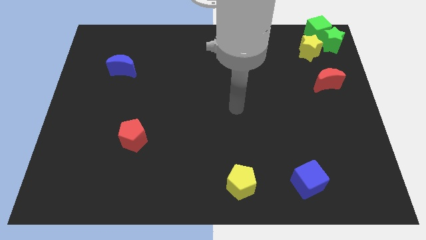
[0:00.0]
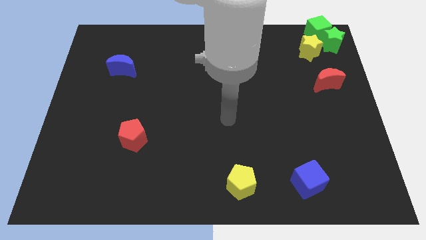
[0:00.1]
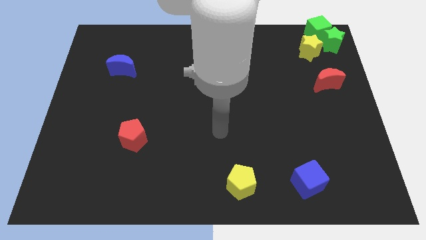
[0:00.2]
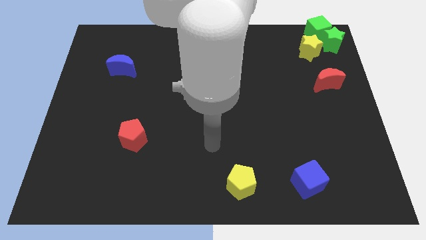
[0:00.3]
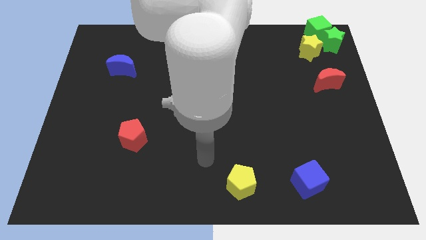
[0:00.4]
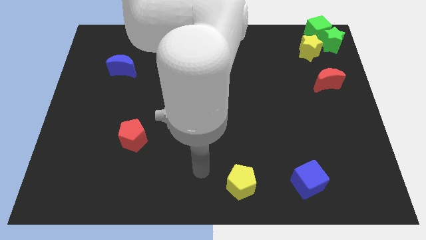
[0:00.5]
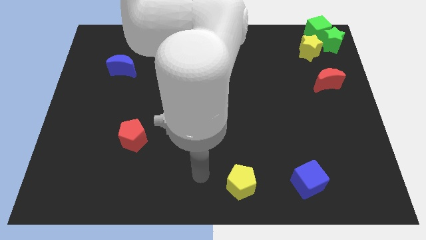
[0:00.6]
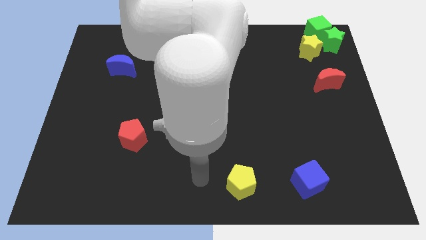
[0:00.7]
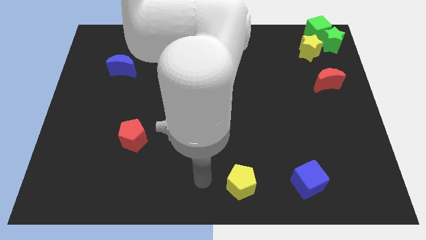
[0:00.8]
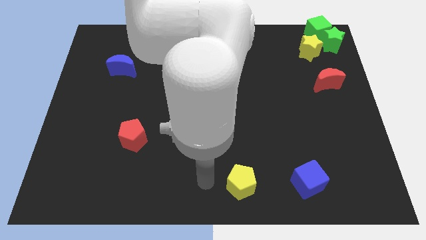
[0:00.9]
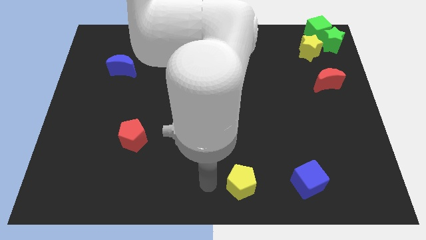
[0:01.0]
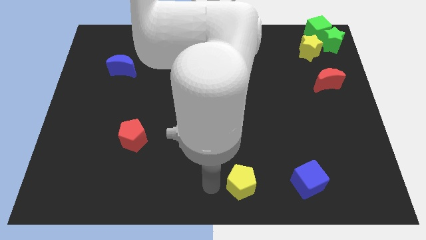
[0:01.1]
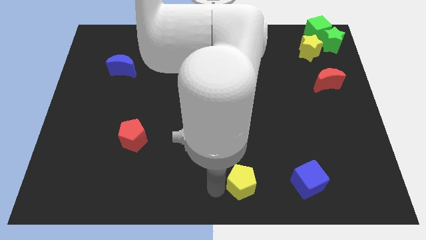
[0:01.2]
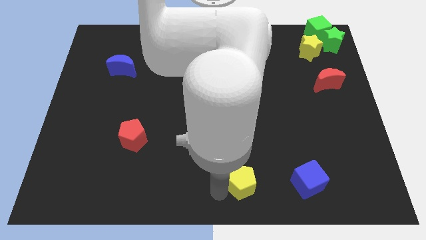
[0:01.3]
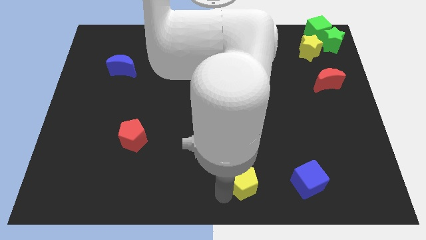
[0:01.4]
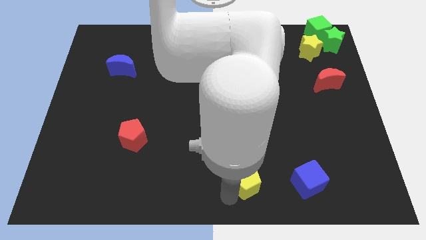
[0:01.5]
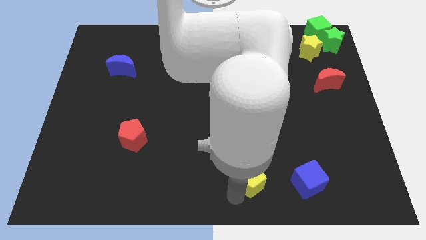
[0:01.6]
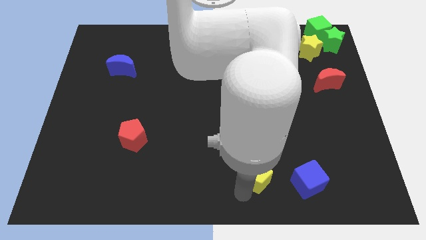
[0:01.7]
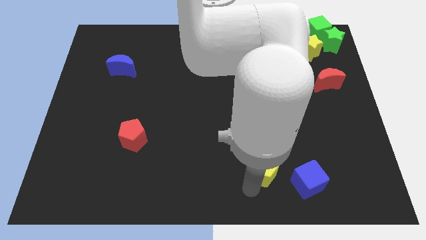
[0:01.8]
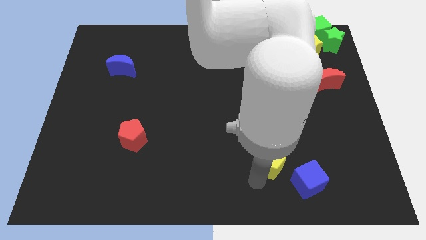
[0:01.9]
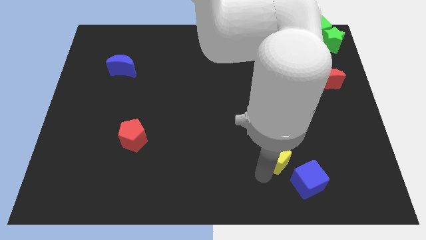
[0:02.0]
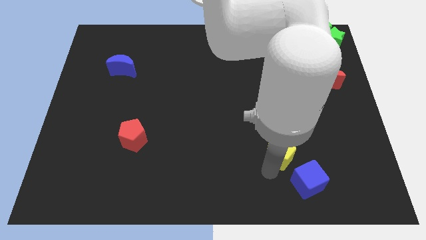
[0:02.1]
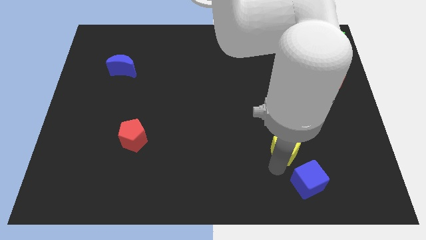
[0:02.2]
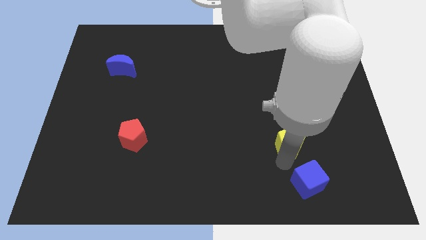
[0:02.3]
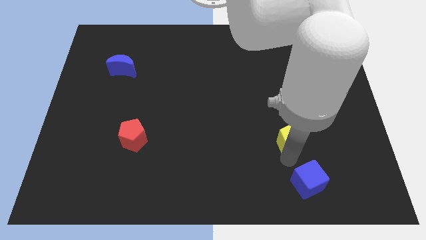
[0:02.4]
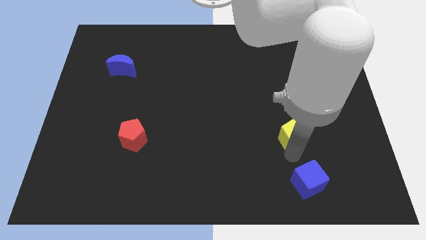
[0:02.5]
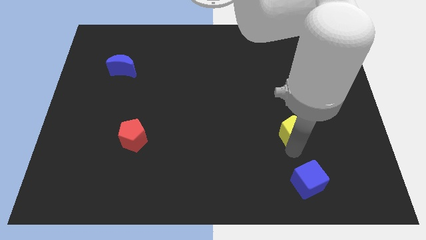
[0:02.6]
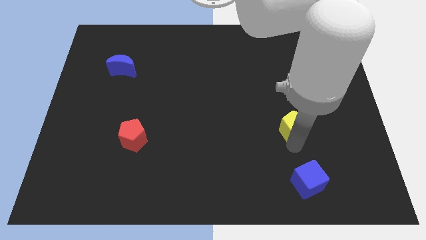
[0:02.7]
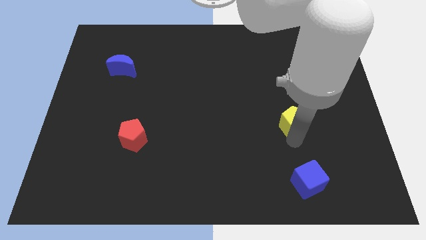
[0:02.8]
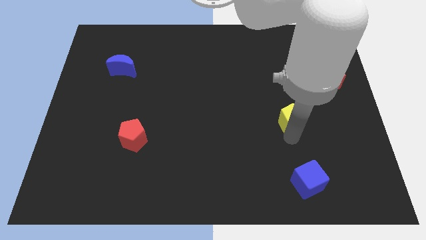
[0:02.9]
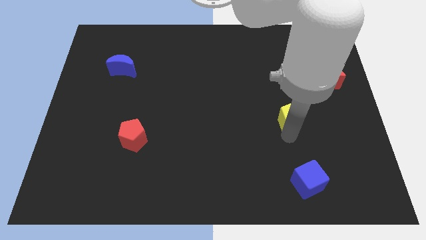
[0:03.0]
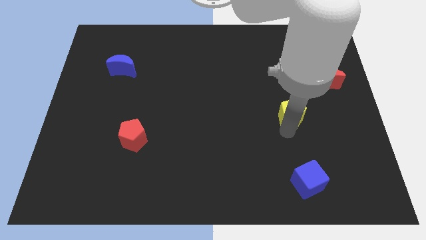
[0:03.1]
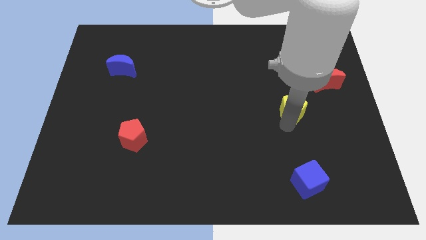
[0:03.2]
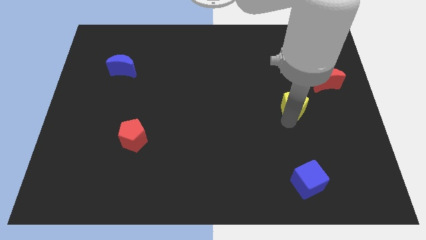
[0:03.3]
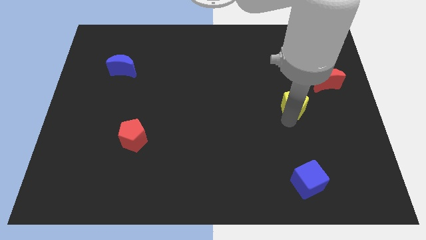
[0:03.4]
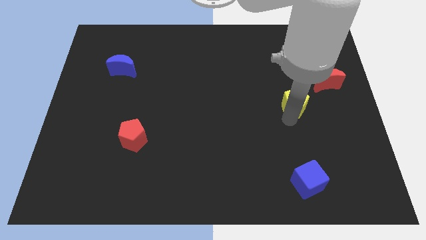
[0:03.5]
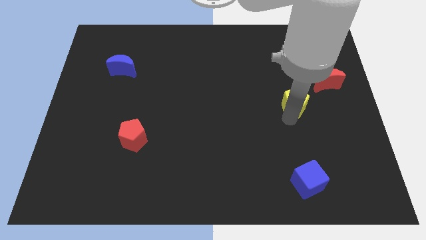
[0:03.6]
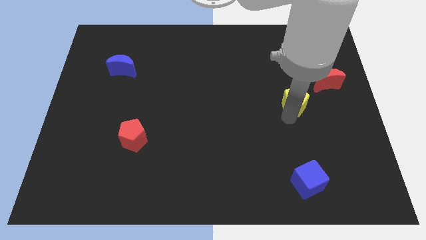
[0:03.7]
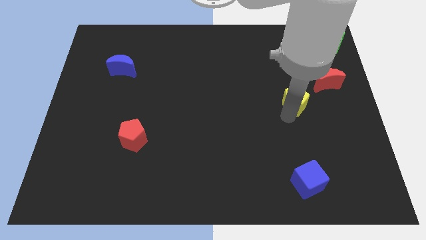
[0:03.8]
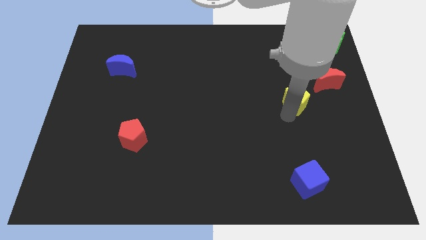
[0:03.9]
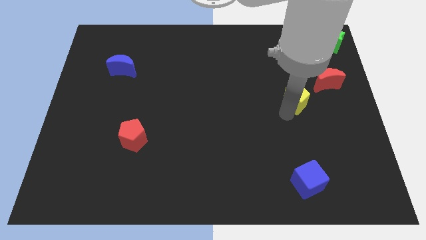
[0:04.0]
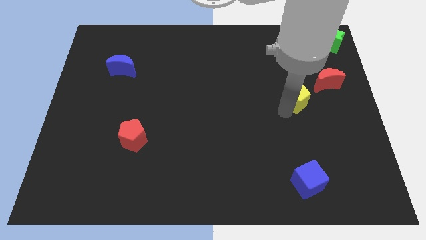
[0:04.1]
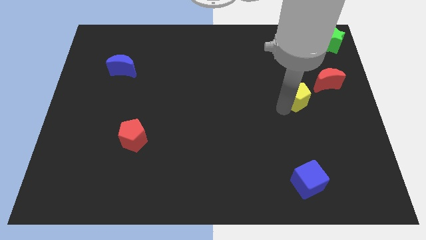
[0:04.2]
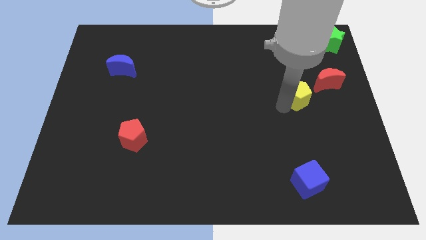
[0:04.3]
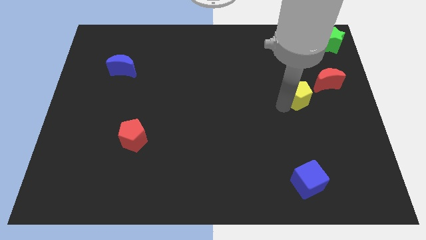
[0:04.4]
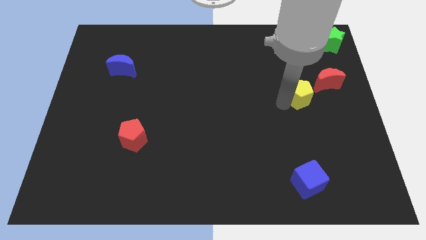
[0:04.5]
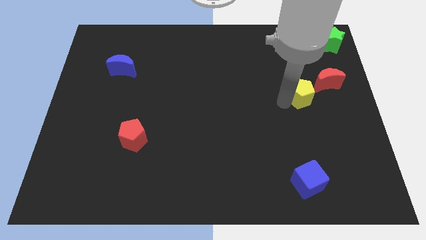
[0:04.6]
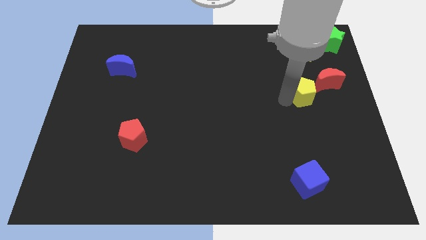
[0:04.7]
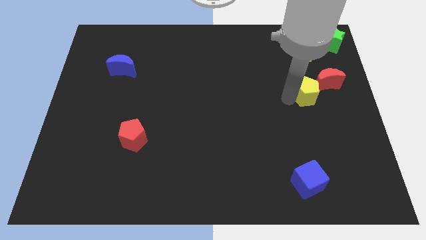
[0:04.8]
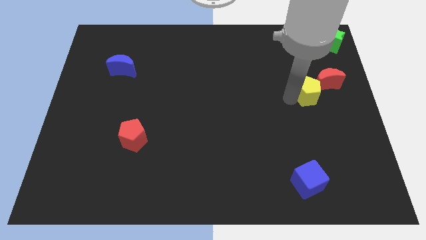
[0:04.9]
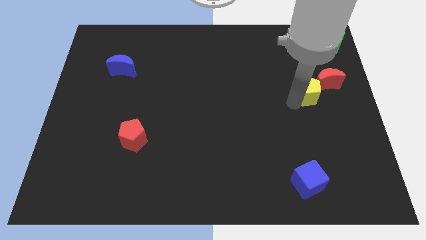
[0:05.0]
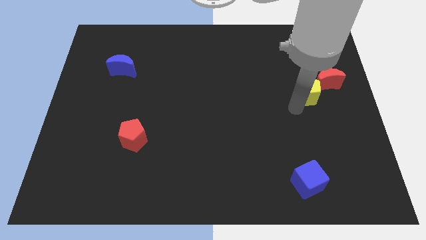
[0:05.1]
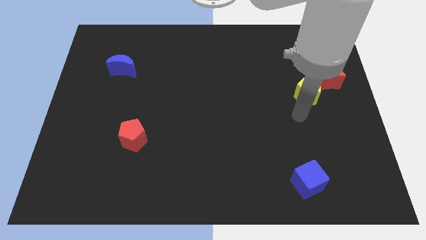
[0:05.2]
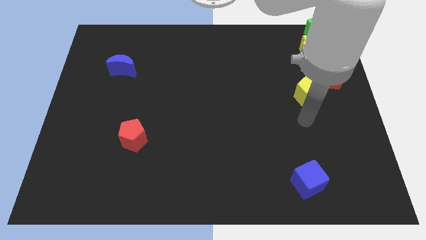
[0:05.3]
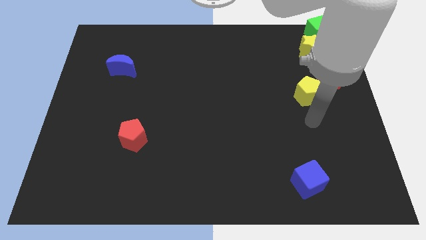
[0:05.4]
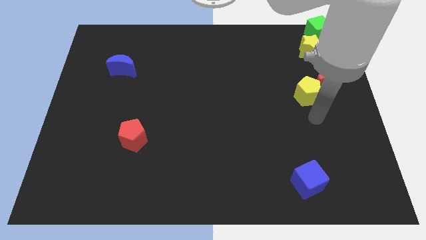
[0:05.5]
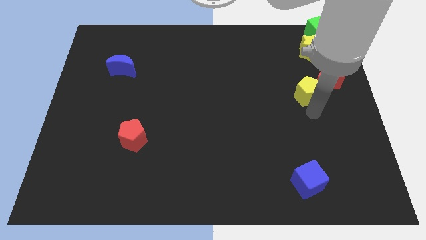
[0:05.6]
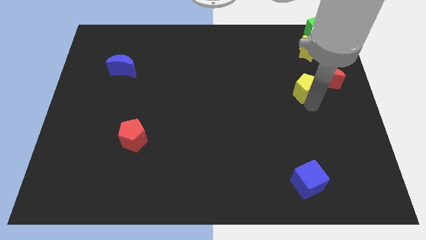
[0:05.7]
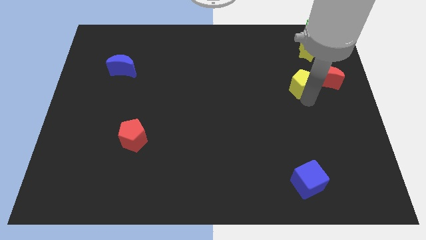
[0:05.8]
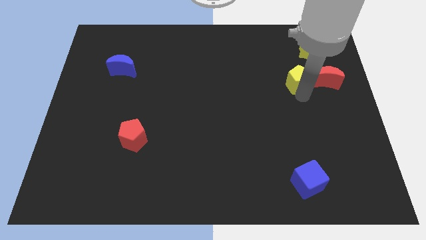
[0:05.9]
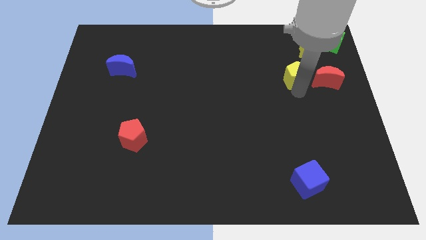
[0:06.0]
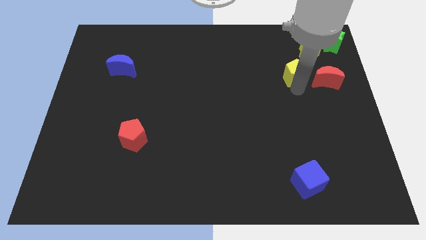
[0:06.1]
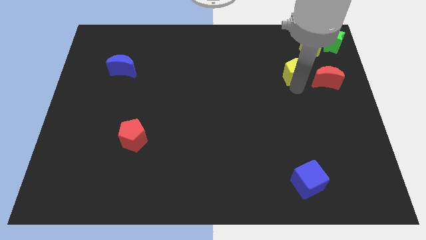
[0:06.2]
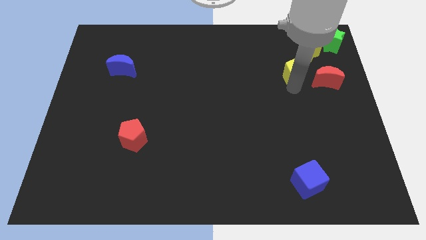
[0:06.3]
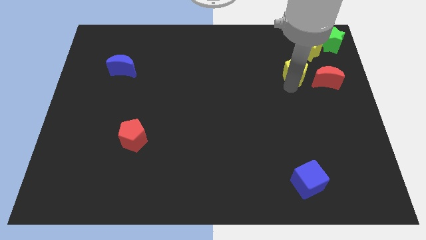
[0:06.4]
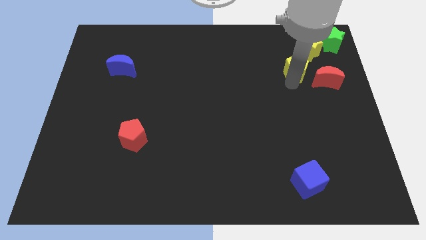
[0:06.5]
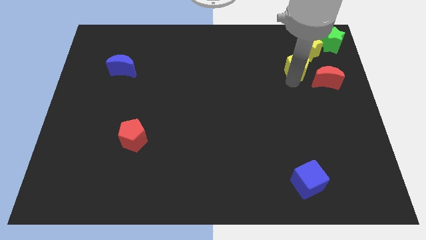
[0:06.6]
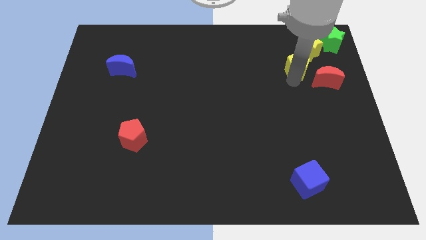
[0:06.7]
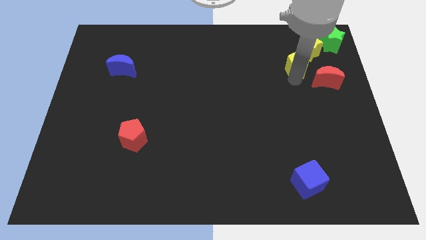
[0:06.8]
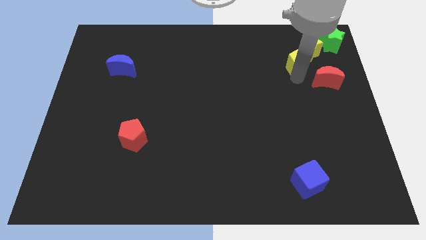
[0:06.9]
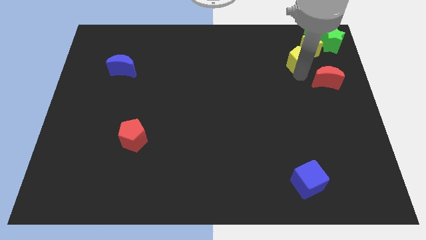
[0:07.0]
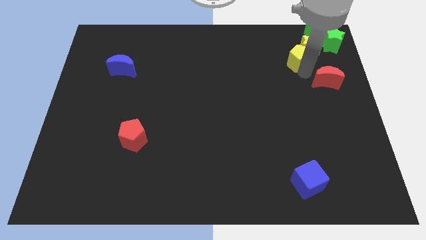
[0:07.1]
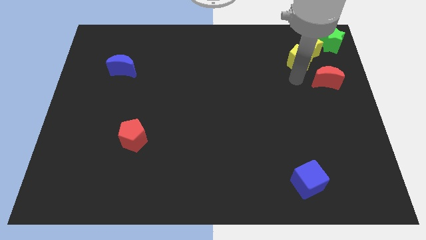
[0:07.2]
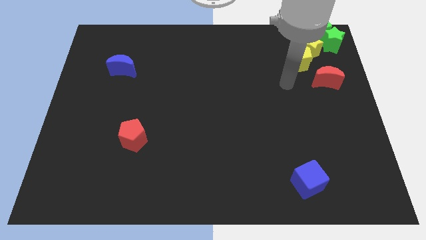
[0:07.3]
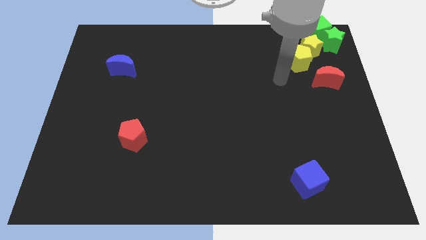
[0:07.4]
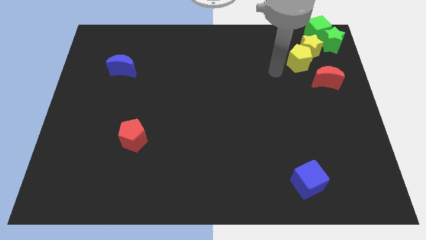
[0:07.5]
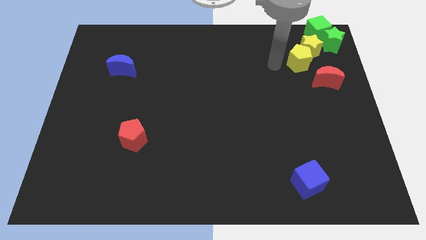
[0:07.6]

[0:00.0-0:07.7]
push the yellow pentagon into the yellow star

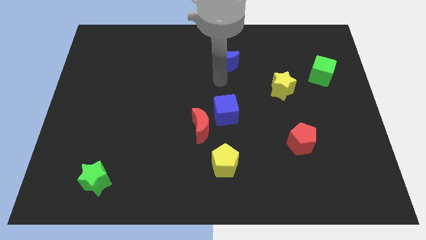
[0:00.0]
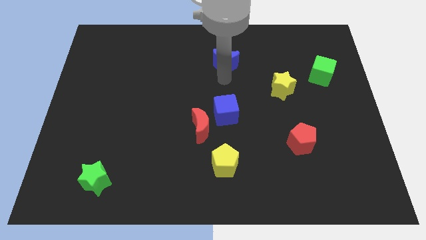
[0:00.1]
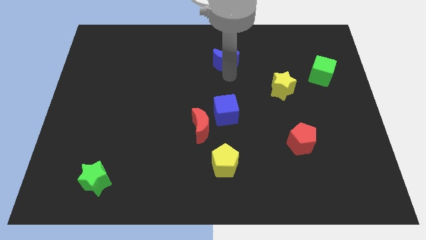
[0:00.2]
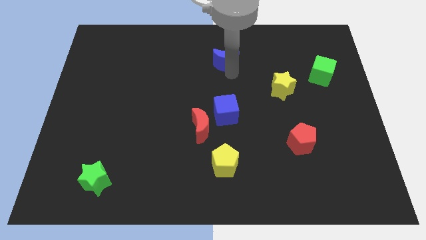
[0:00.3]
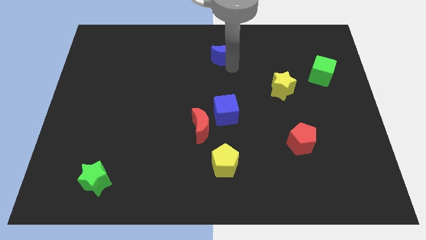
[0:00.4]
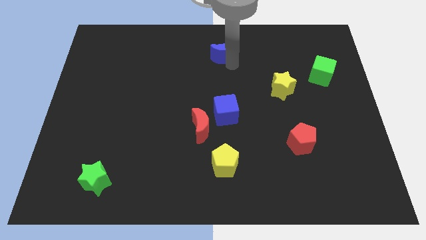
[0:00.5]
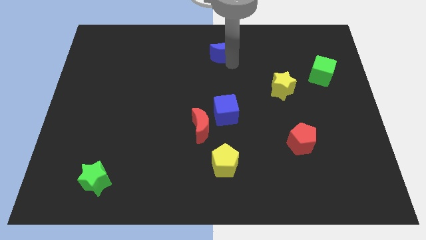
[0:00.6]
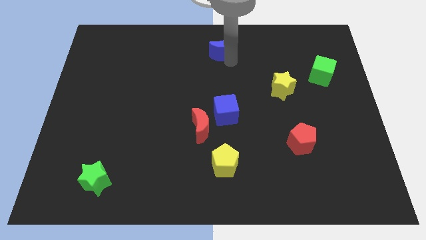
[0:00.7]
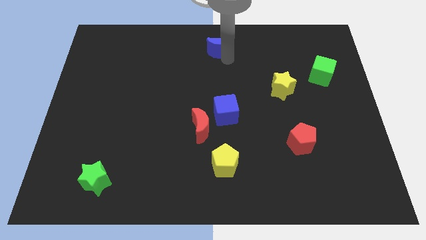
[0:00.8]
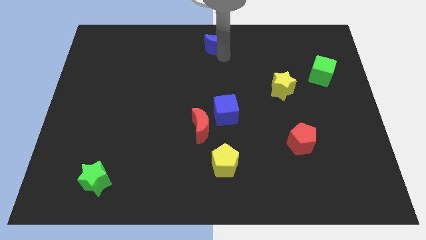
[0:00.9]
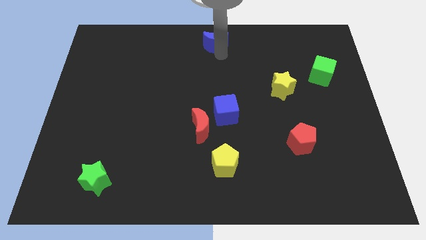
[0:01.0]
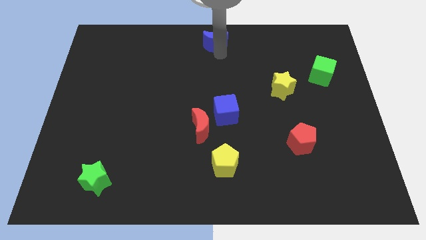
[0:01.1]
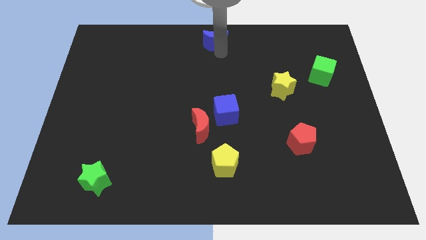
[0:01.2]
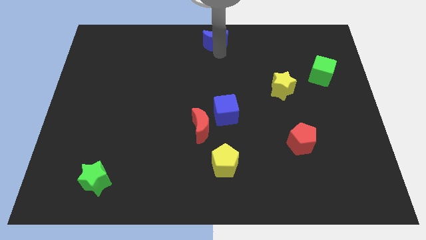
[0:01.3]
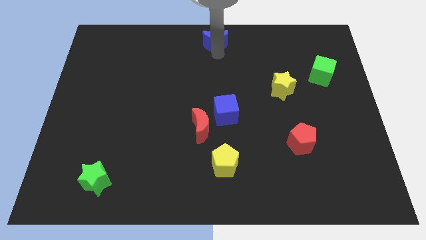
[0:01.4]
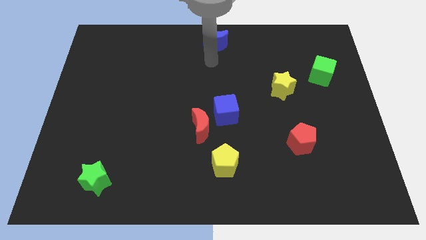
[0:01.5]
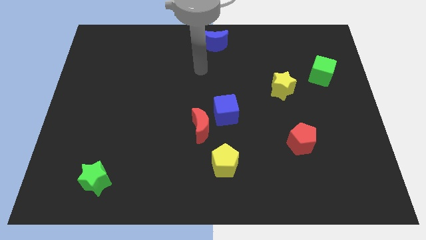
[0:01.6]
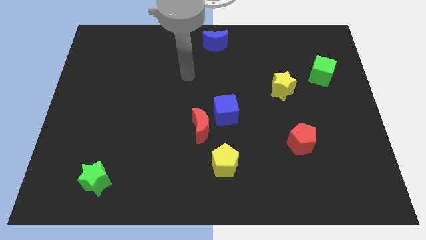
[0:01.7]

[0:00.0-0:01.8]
slide the blue crescent diagonally top left to the green cube
